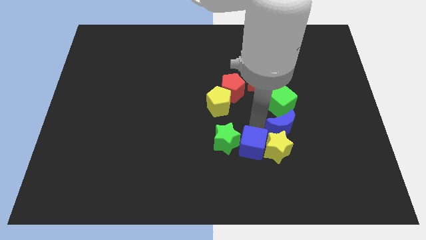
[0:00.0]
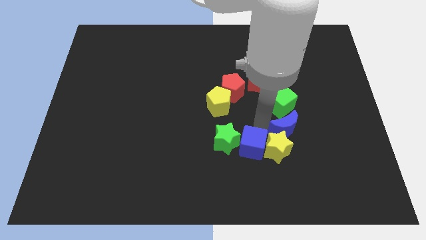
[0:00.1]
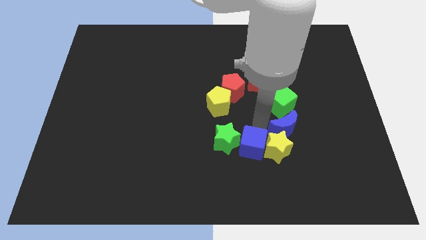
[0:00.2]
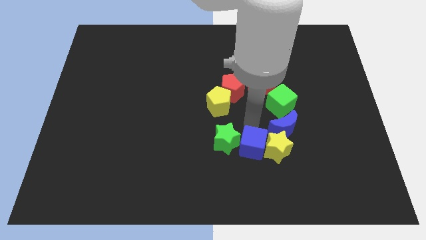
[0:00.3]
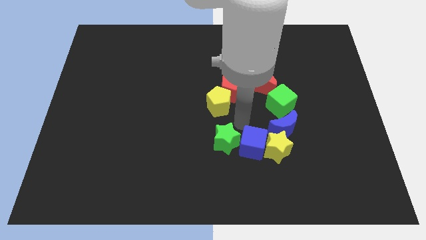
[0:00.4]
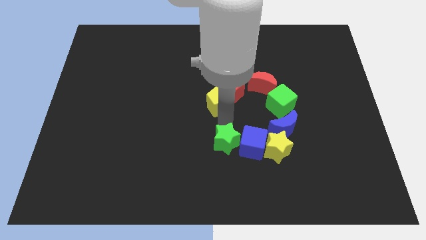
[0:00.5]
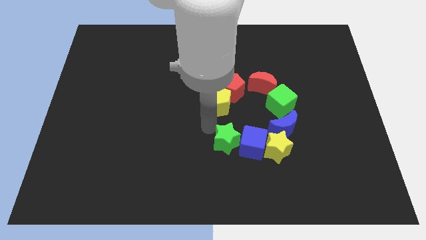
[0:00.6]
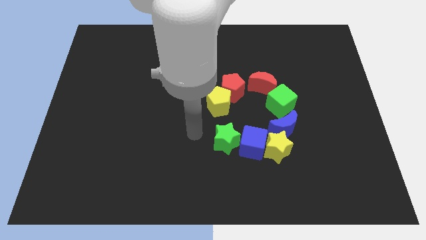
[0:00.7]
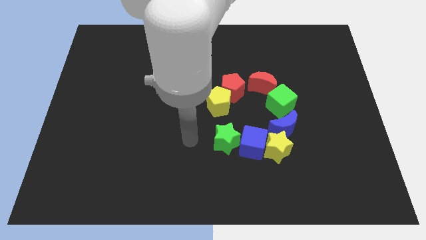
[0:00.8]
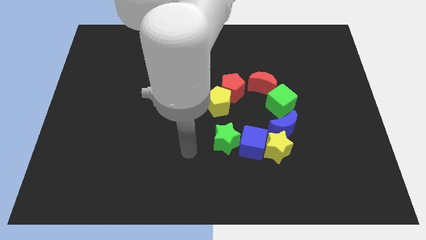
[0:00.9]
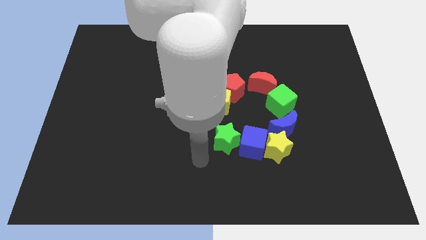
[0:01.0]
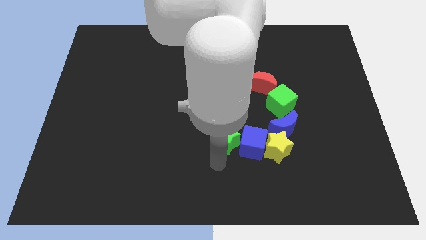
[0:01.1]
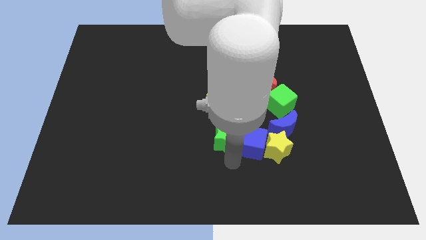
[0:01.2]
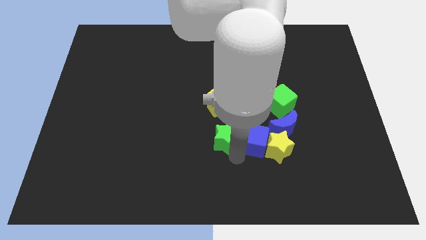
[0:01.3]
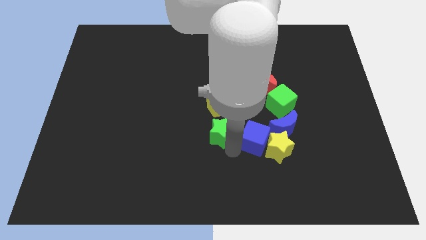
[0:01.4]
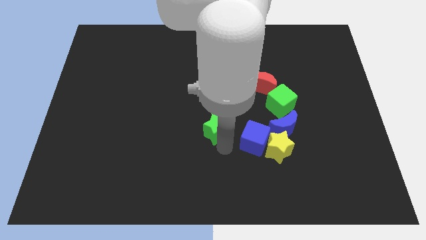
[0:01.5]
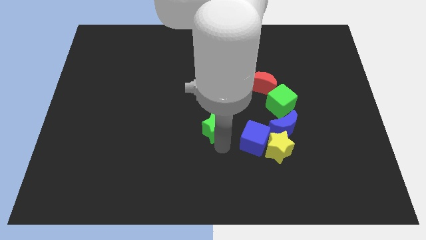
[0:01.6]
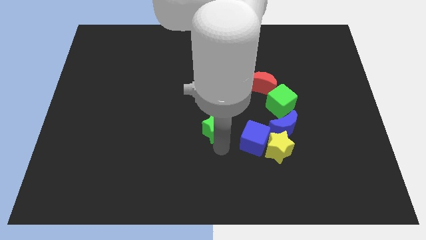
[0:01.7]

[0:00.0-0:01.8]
place the green star below the yellow pentagon

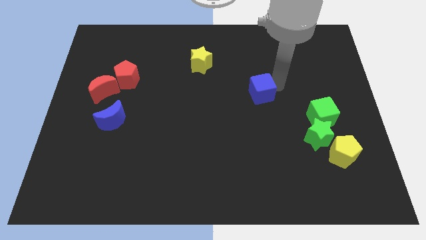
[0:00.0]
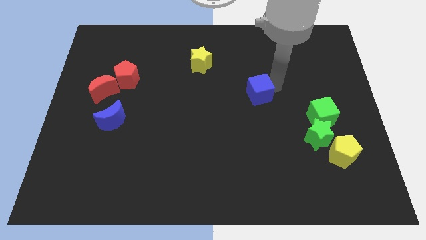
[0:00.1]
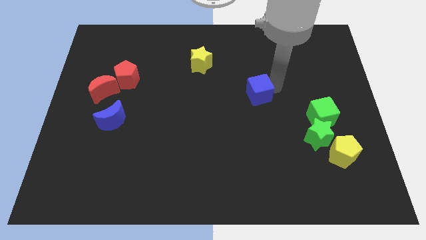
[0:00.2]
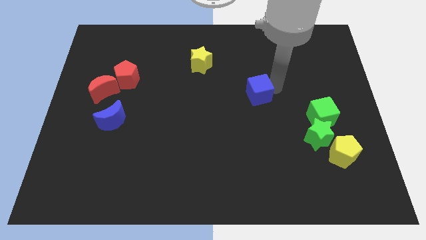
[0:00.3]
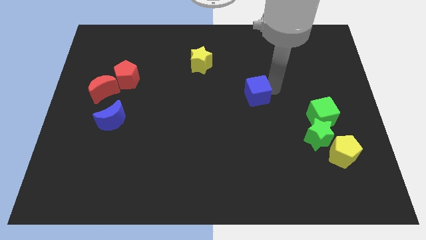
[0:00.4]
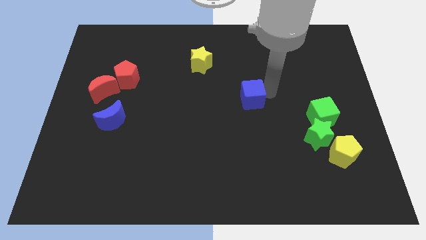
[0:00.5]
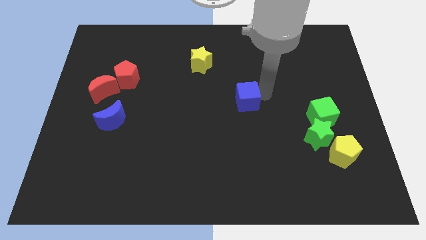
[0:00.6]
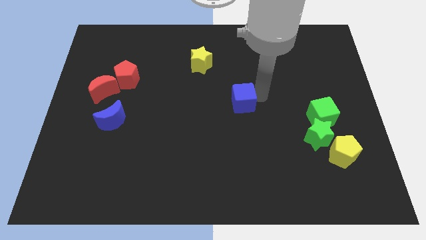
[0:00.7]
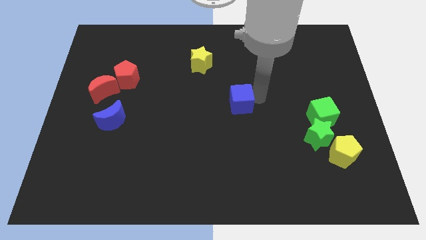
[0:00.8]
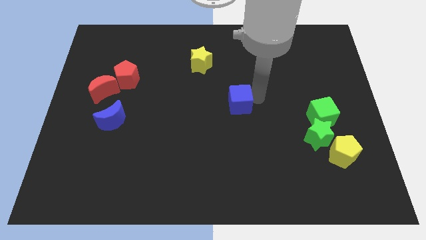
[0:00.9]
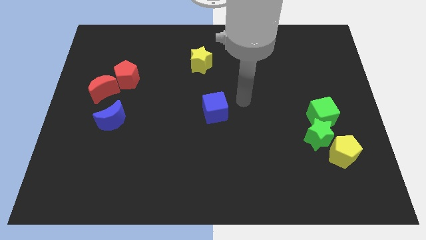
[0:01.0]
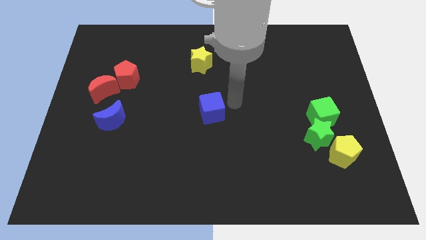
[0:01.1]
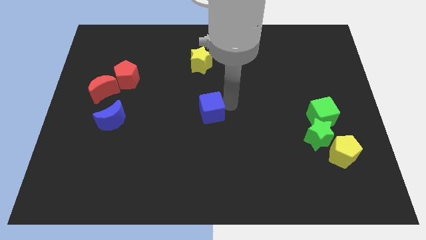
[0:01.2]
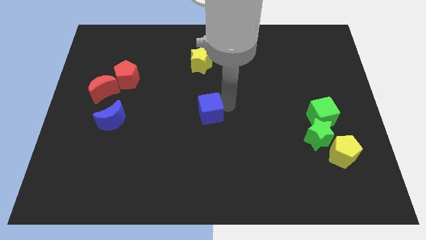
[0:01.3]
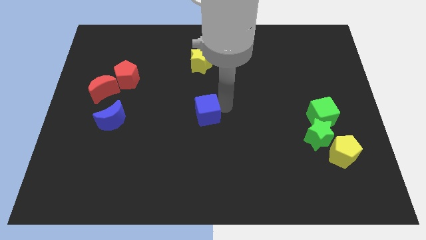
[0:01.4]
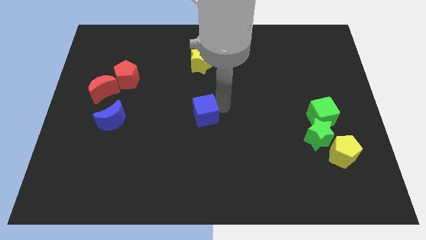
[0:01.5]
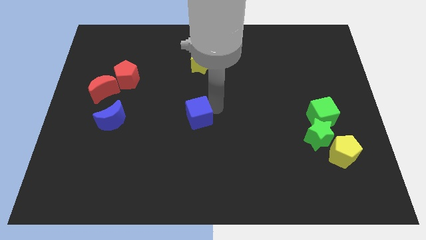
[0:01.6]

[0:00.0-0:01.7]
place the blue cube vertically below the yellow star

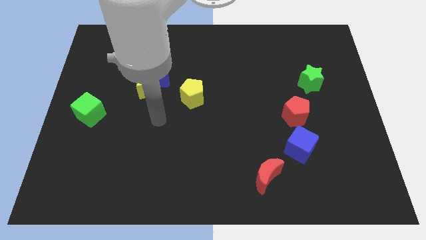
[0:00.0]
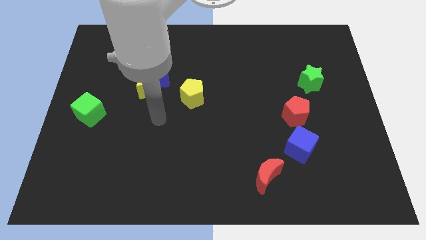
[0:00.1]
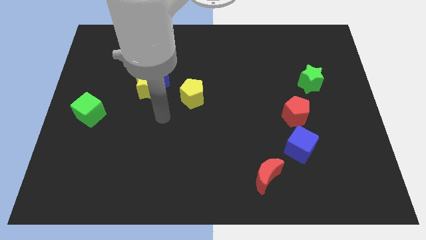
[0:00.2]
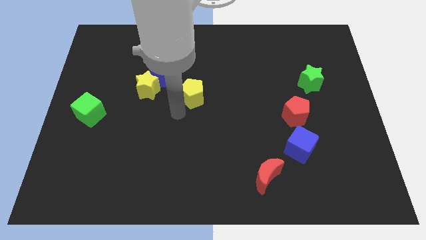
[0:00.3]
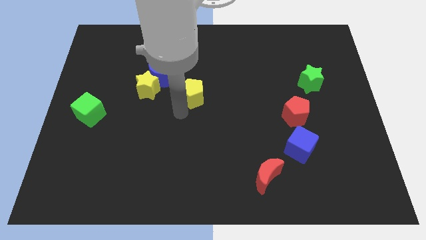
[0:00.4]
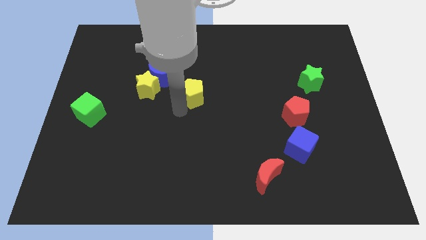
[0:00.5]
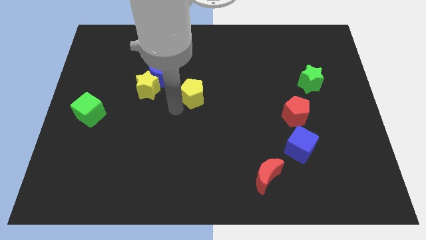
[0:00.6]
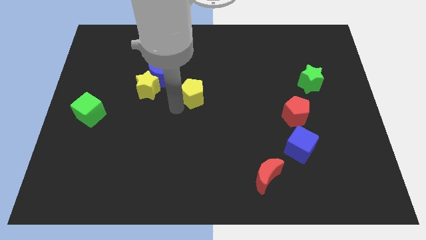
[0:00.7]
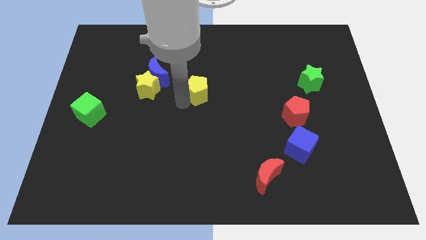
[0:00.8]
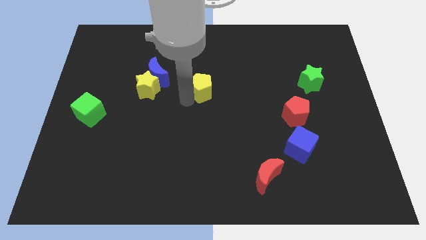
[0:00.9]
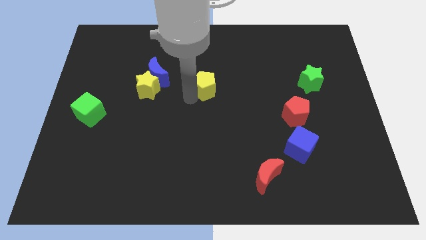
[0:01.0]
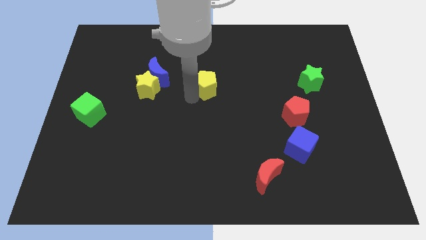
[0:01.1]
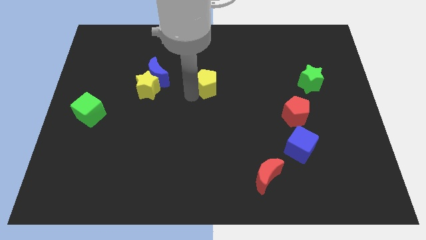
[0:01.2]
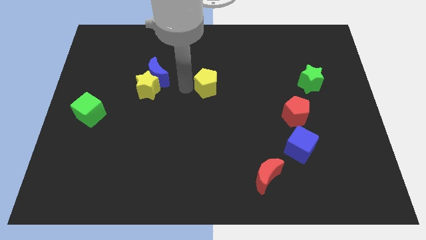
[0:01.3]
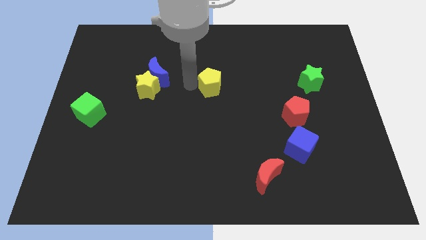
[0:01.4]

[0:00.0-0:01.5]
place the yellow pentagon to the right of the blue crescent

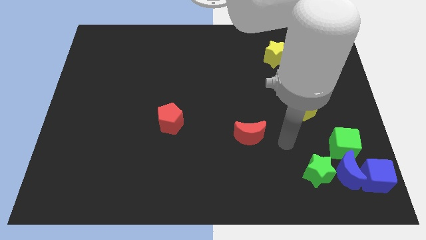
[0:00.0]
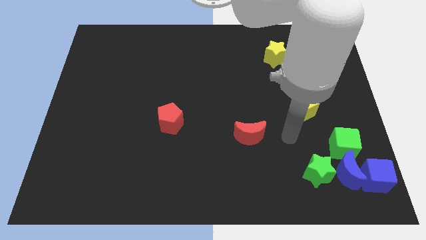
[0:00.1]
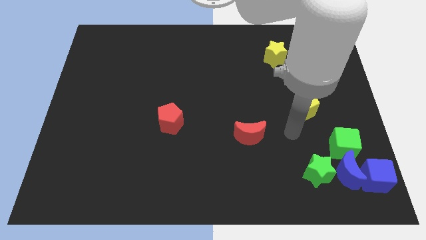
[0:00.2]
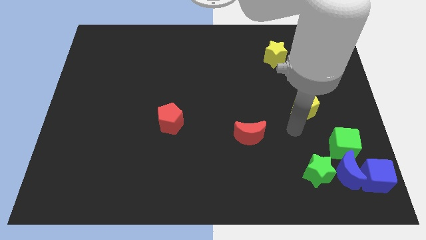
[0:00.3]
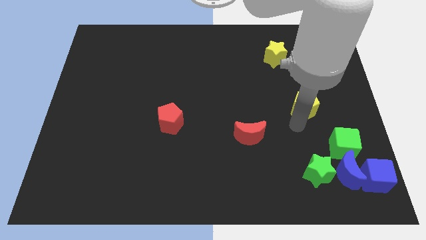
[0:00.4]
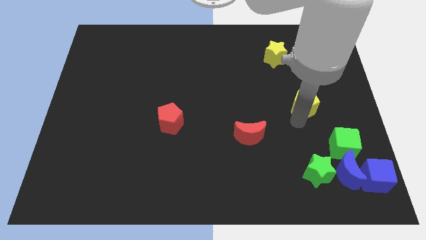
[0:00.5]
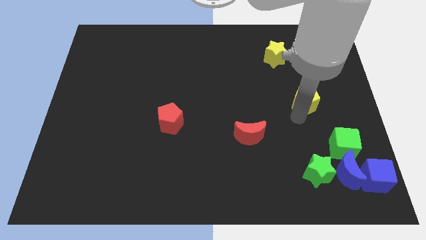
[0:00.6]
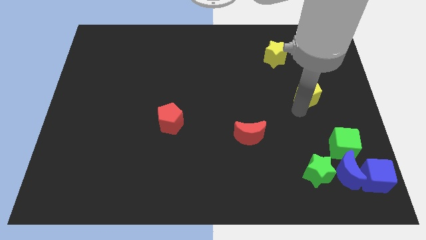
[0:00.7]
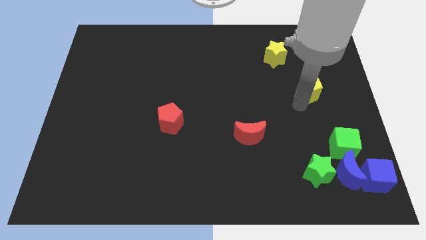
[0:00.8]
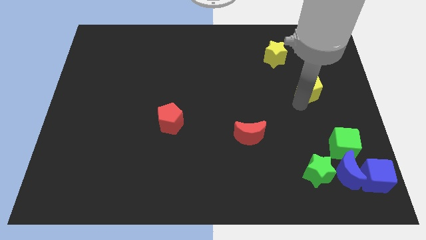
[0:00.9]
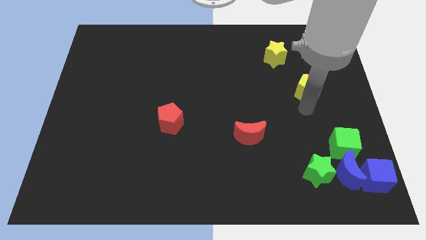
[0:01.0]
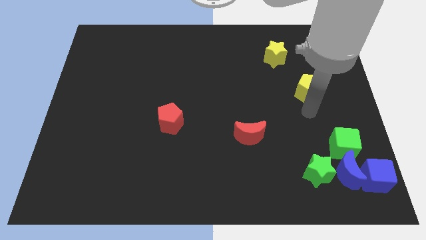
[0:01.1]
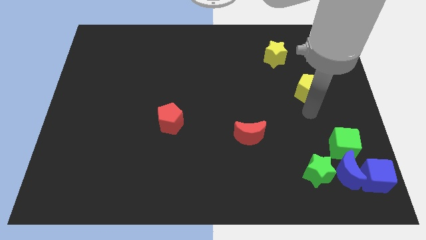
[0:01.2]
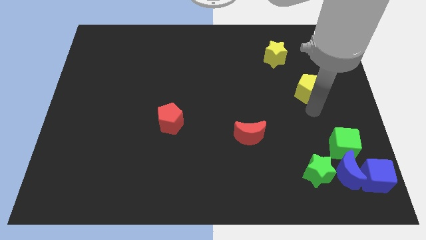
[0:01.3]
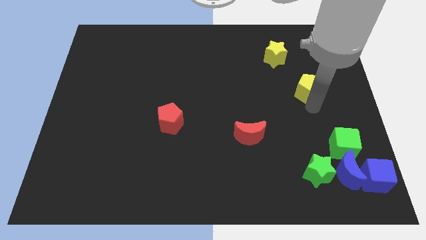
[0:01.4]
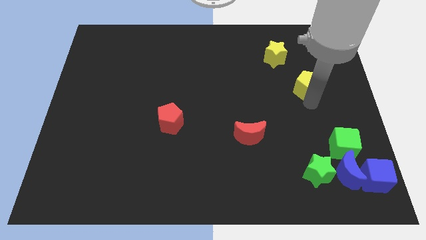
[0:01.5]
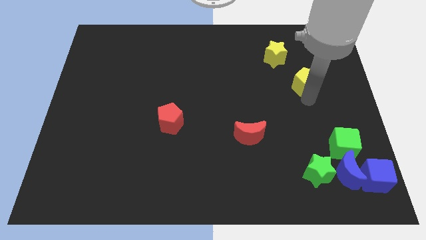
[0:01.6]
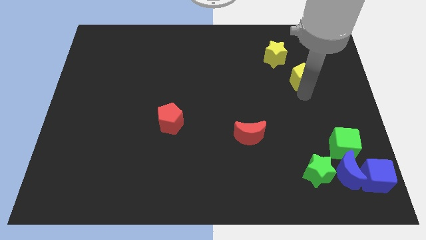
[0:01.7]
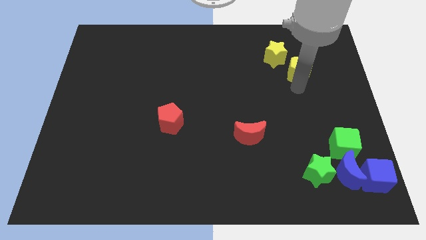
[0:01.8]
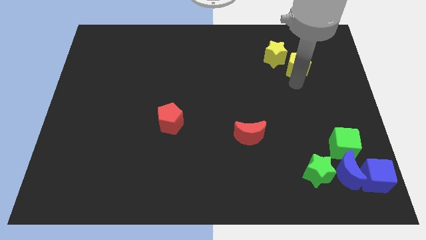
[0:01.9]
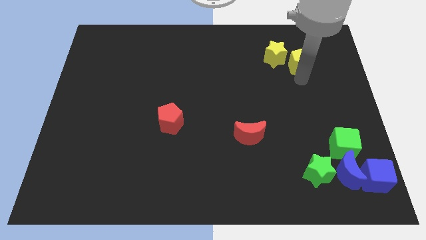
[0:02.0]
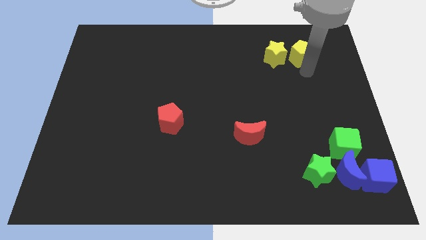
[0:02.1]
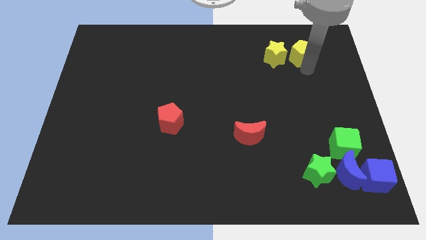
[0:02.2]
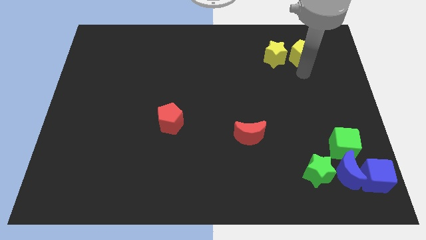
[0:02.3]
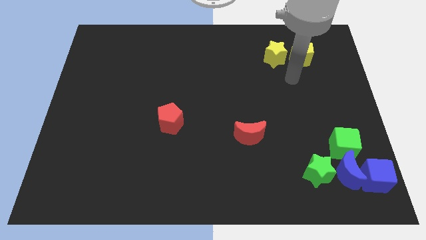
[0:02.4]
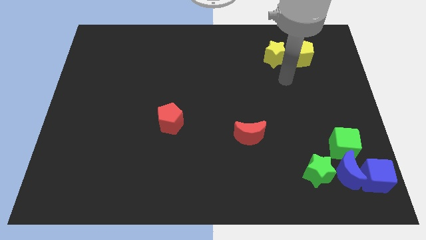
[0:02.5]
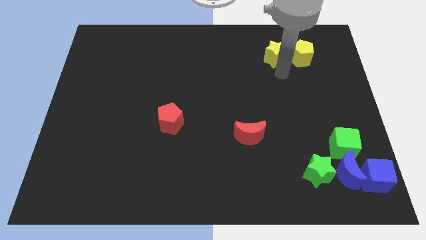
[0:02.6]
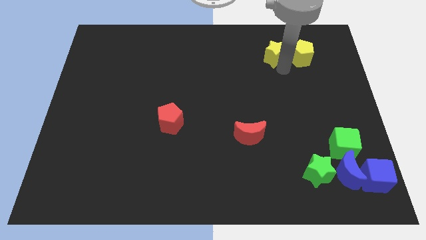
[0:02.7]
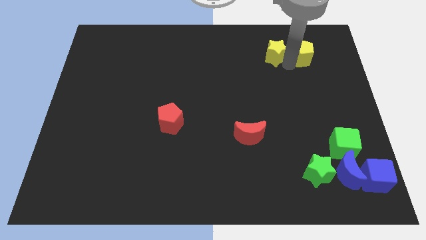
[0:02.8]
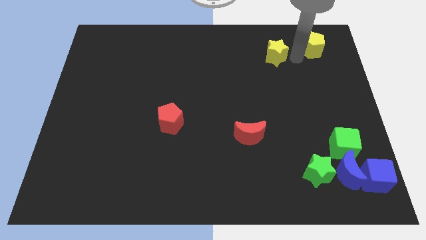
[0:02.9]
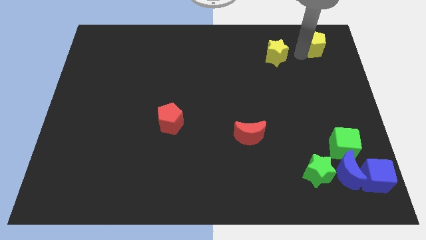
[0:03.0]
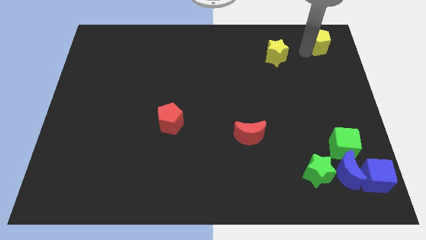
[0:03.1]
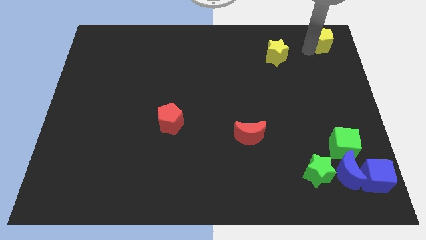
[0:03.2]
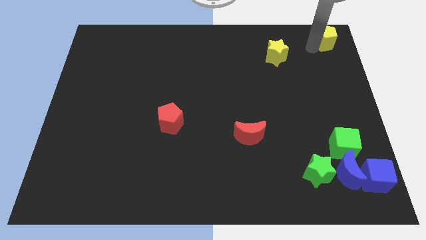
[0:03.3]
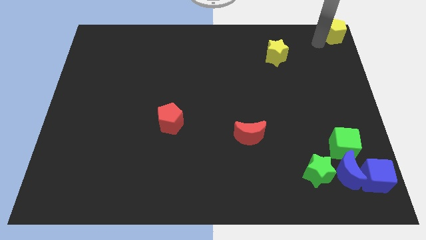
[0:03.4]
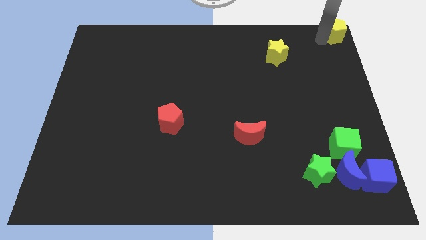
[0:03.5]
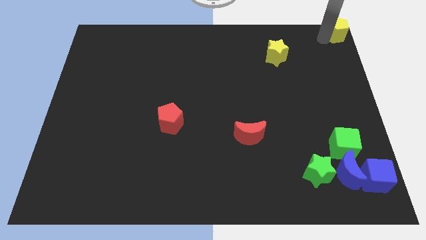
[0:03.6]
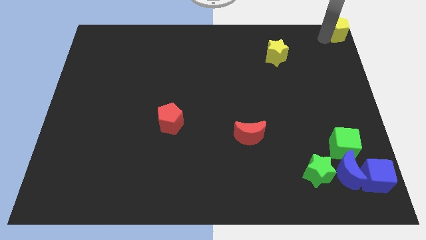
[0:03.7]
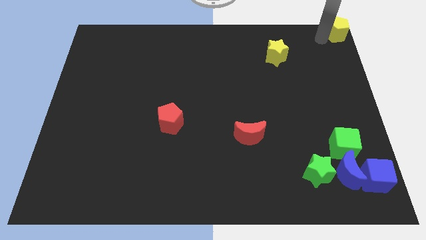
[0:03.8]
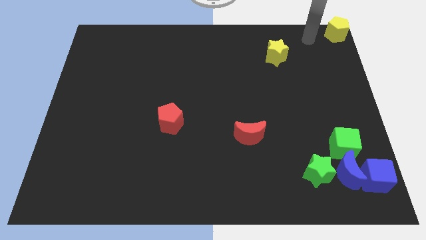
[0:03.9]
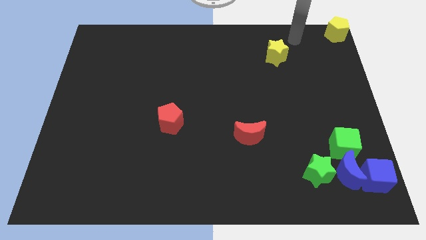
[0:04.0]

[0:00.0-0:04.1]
push the yellow pentagon to the top right of the board
